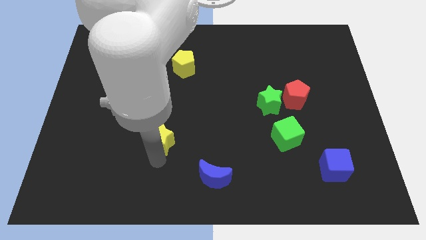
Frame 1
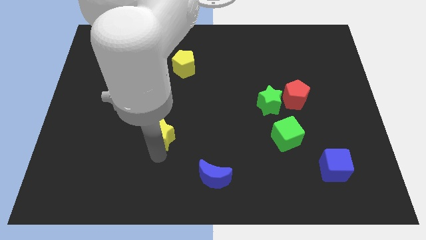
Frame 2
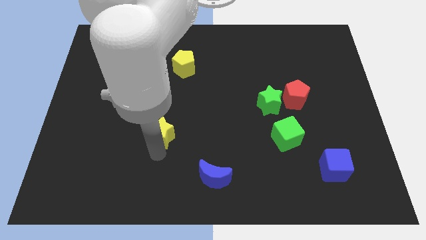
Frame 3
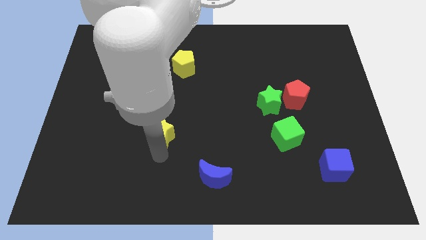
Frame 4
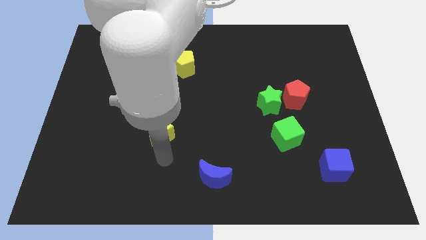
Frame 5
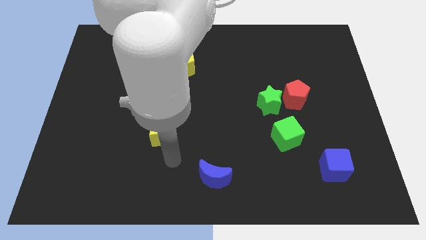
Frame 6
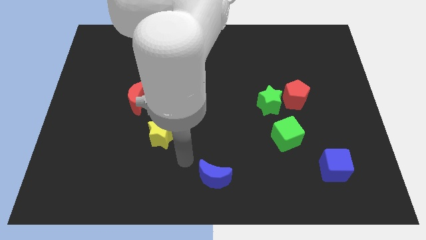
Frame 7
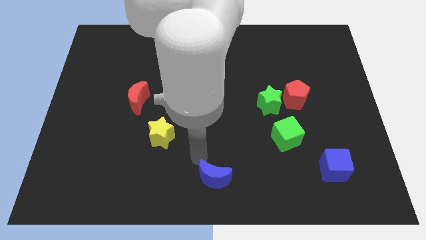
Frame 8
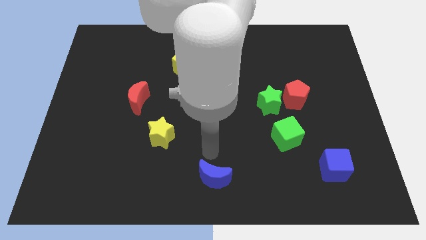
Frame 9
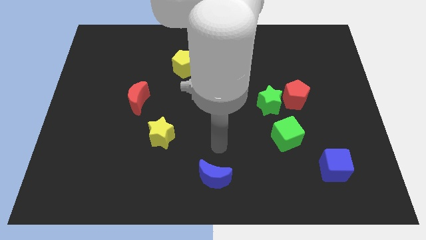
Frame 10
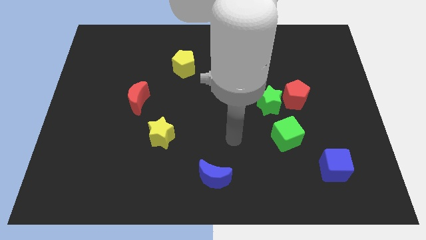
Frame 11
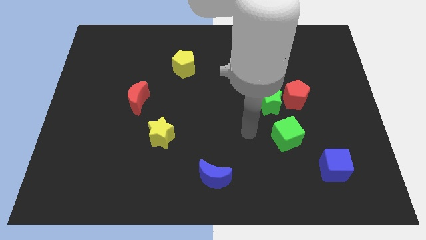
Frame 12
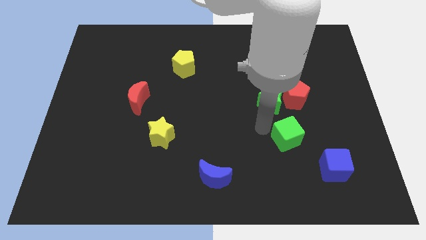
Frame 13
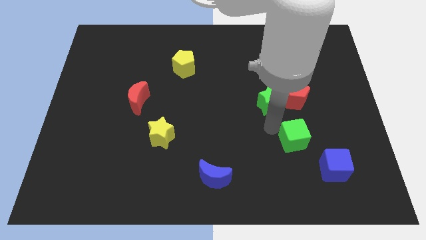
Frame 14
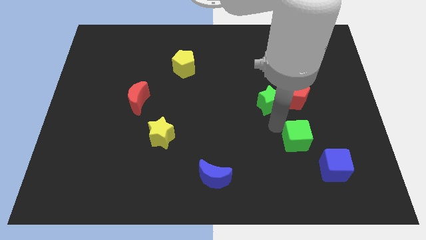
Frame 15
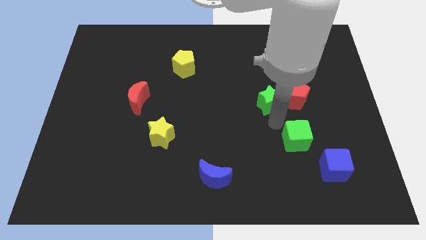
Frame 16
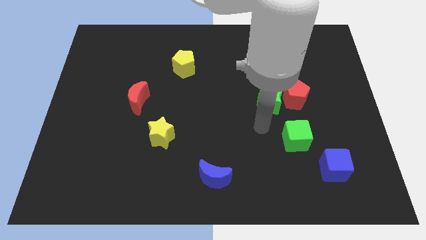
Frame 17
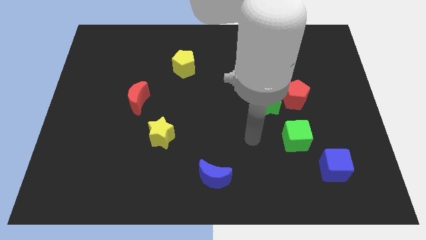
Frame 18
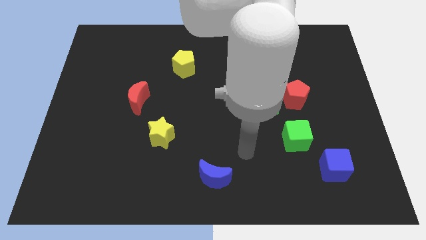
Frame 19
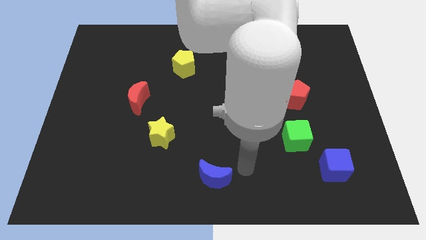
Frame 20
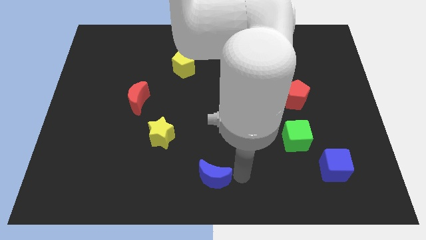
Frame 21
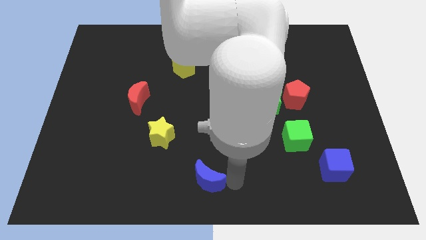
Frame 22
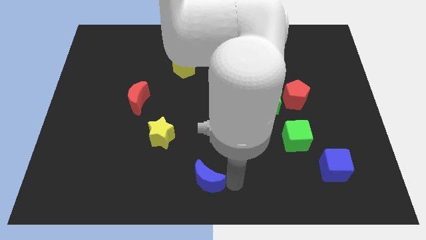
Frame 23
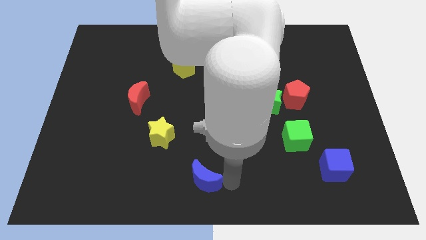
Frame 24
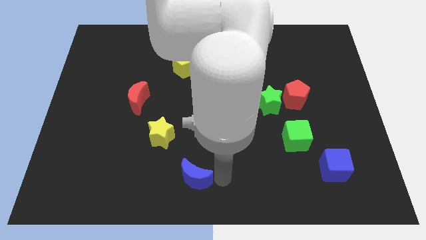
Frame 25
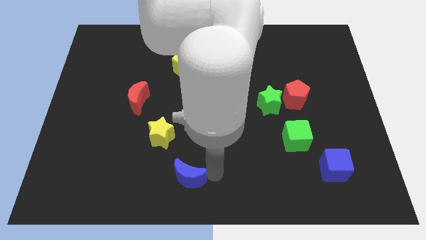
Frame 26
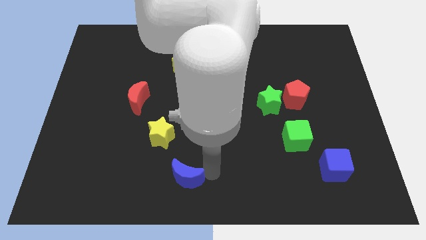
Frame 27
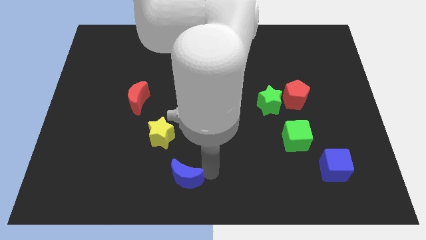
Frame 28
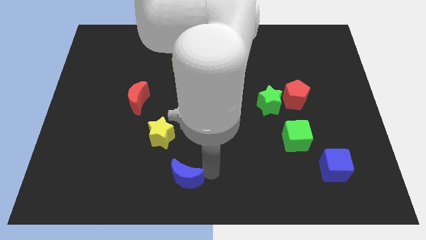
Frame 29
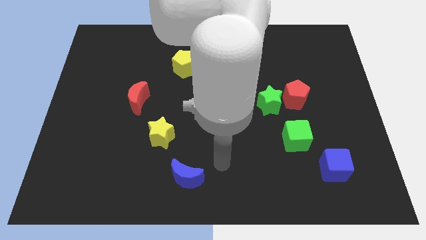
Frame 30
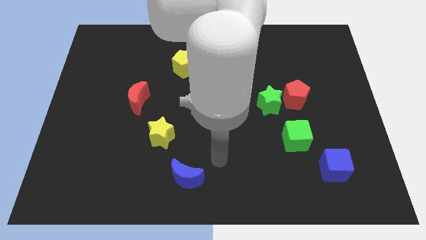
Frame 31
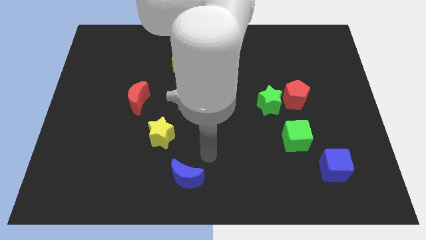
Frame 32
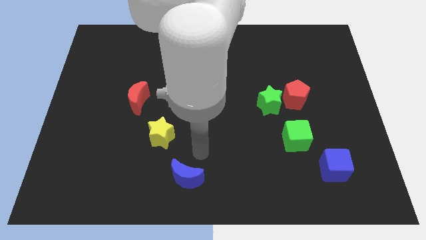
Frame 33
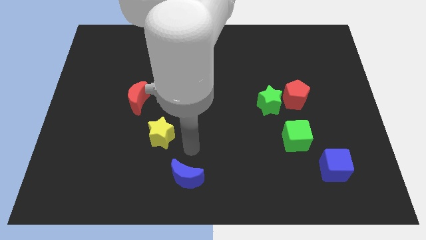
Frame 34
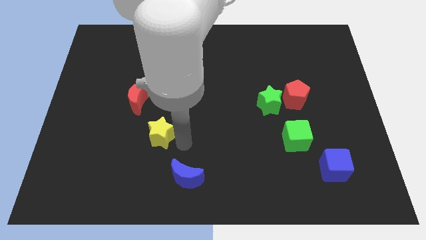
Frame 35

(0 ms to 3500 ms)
move the blue moon slightly to the yellow star

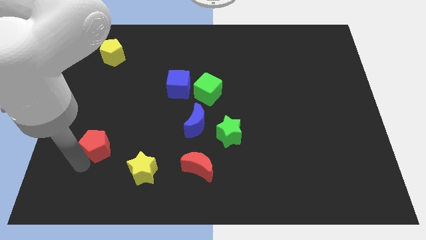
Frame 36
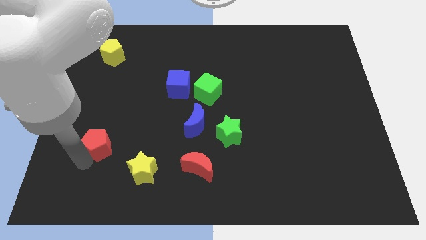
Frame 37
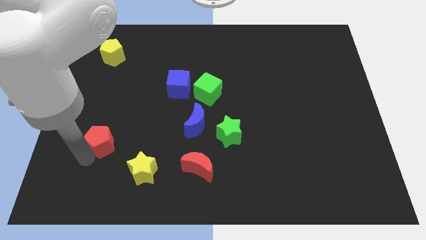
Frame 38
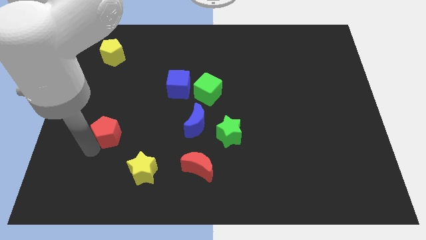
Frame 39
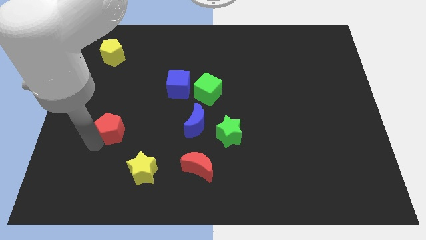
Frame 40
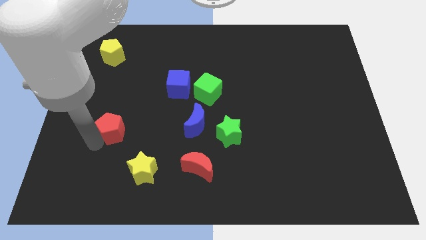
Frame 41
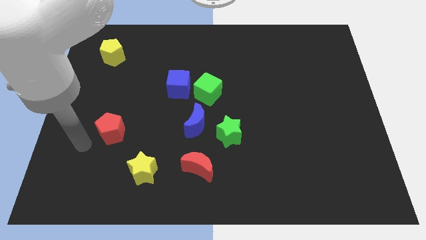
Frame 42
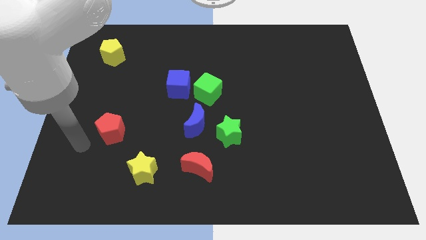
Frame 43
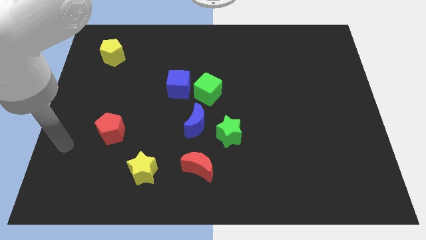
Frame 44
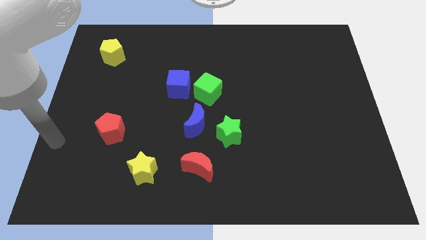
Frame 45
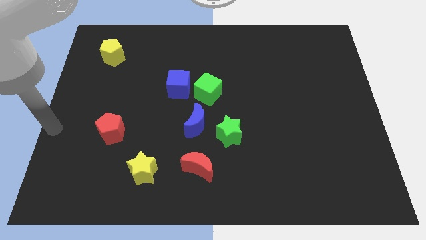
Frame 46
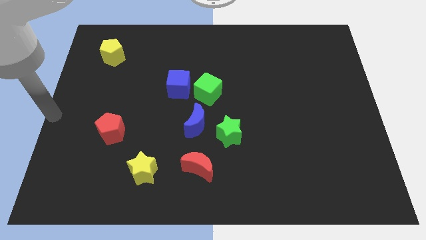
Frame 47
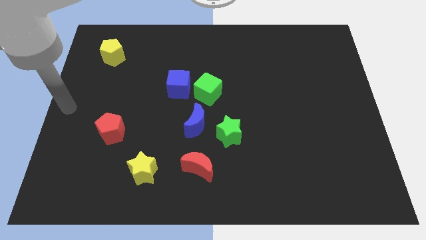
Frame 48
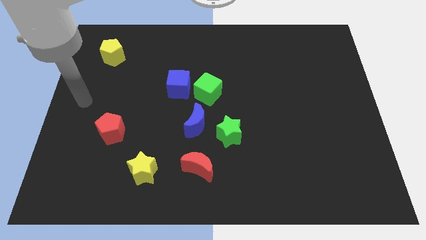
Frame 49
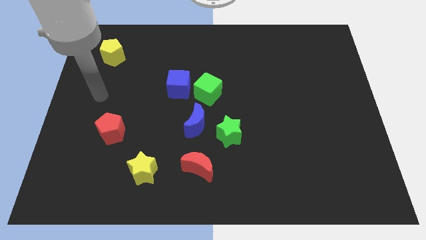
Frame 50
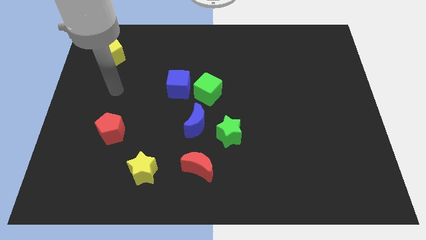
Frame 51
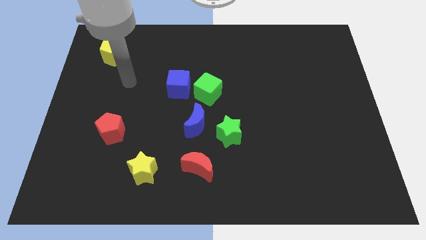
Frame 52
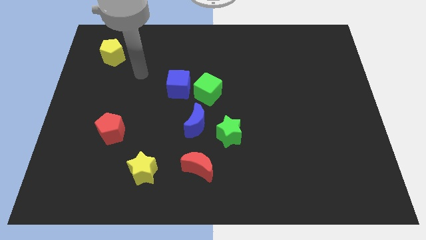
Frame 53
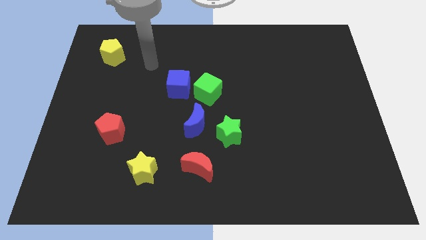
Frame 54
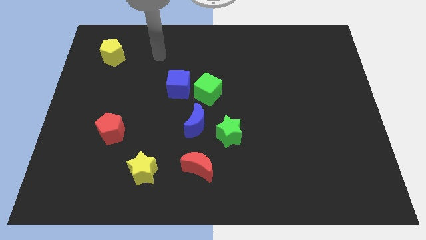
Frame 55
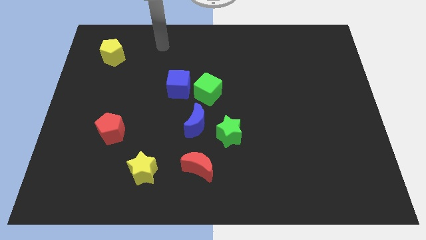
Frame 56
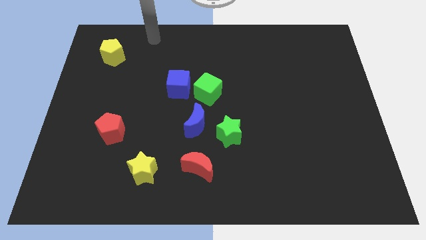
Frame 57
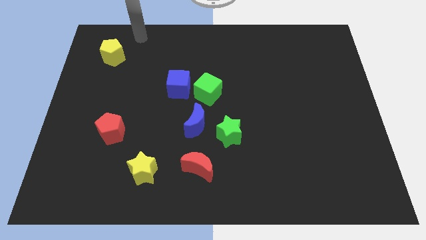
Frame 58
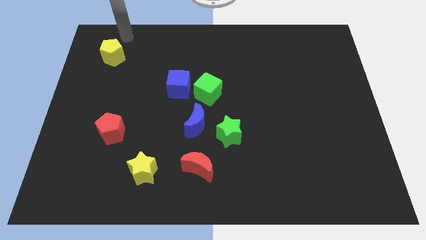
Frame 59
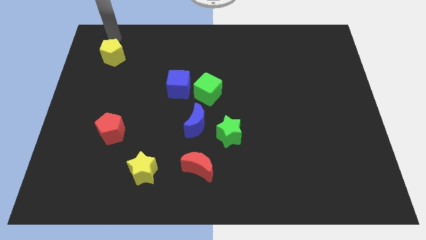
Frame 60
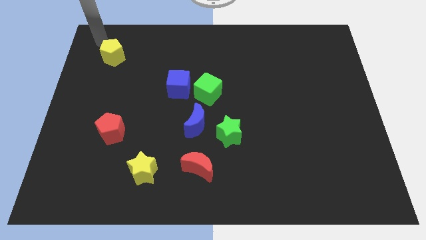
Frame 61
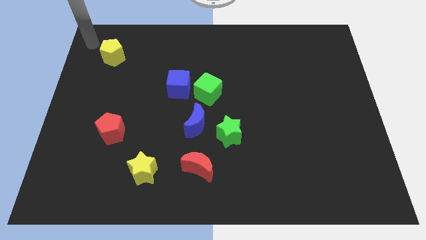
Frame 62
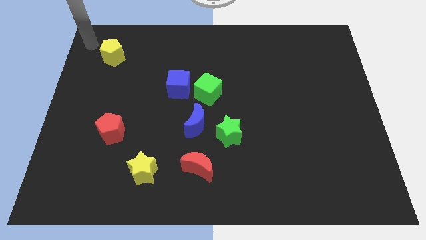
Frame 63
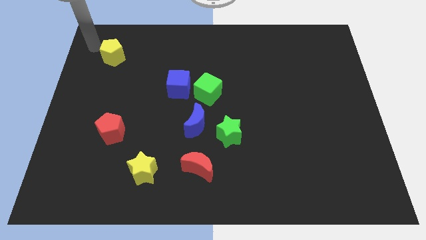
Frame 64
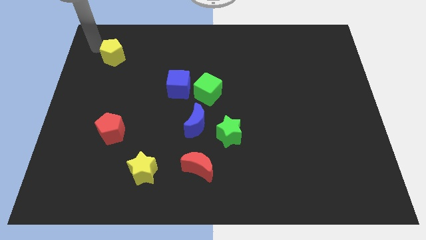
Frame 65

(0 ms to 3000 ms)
place the arm towards the left side of the yellow pentagon

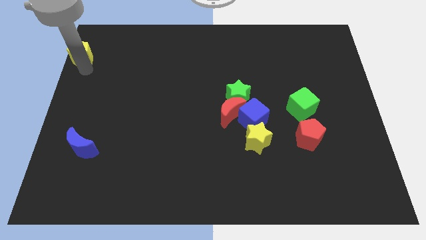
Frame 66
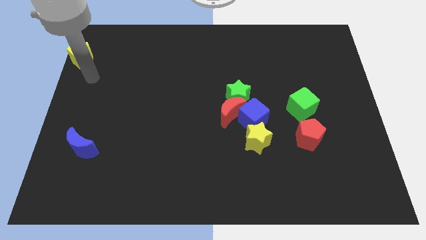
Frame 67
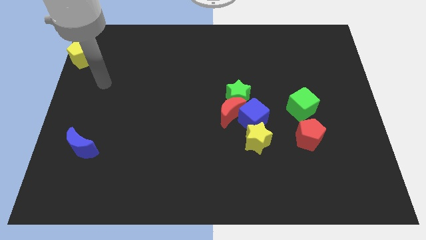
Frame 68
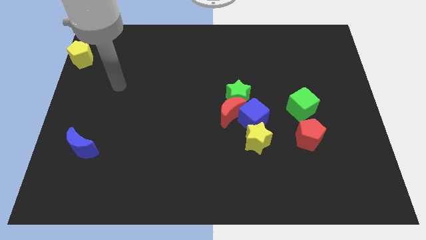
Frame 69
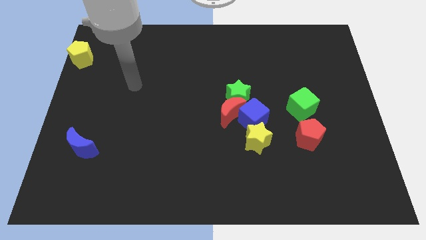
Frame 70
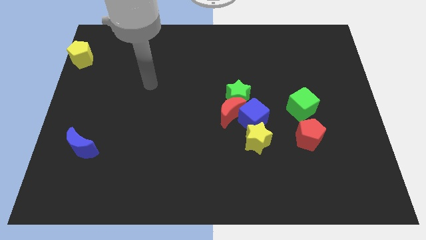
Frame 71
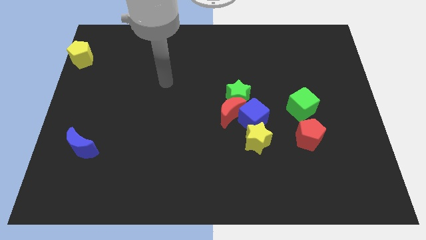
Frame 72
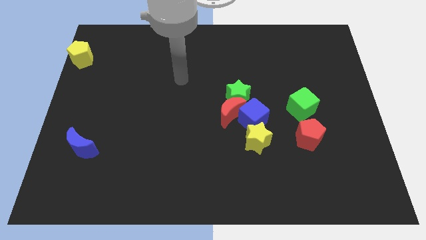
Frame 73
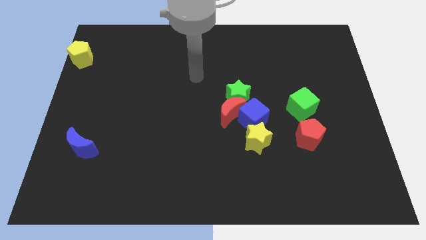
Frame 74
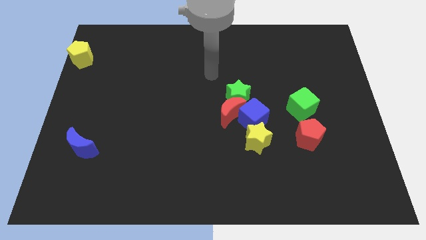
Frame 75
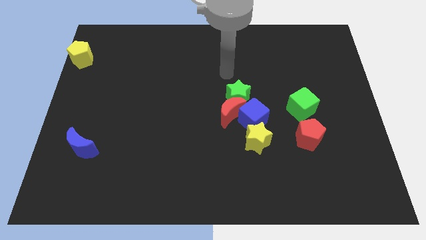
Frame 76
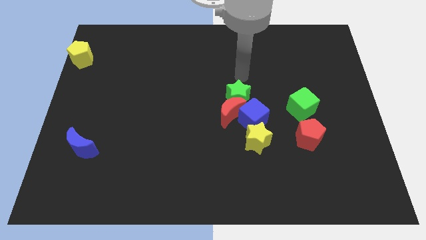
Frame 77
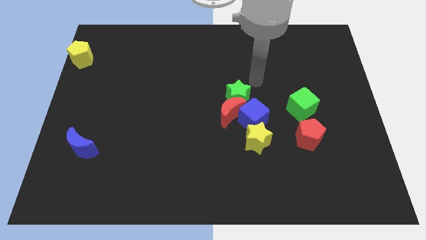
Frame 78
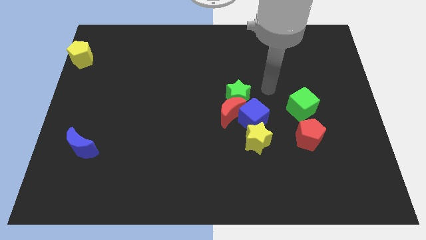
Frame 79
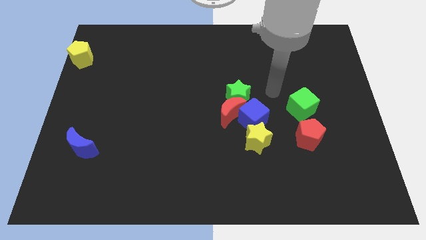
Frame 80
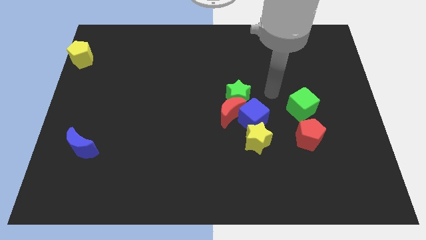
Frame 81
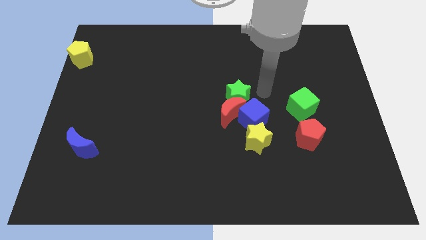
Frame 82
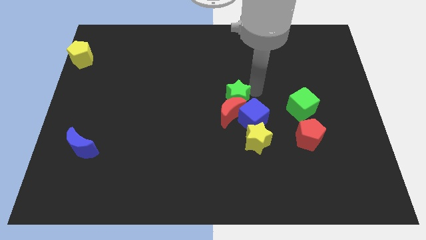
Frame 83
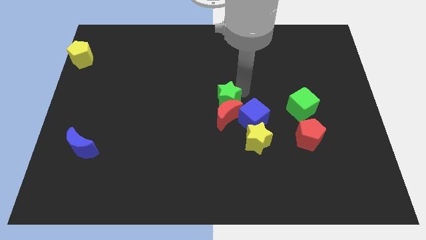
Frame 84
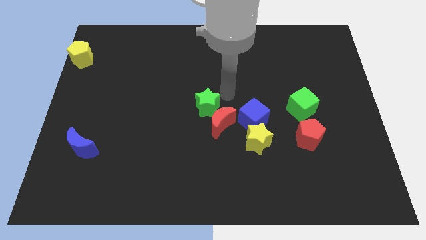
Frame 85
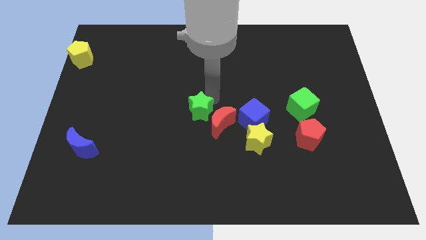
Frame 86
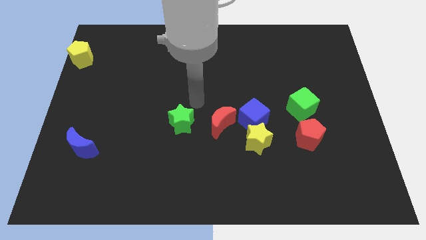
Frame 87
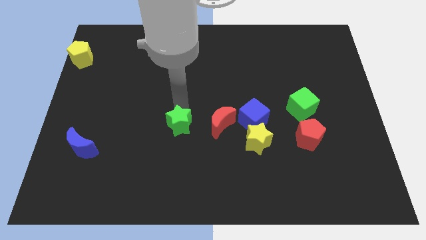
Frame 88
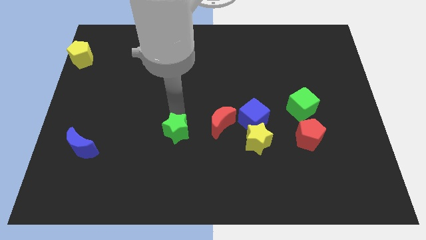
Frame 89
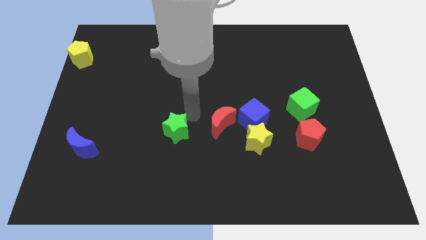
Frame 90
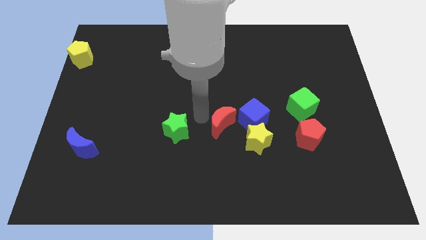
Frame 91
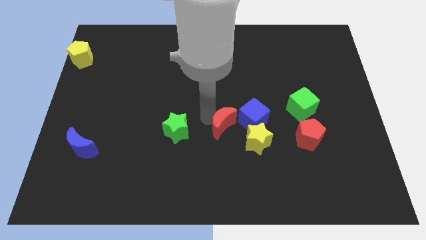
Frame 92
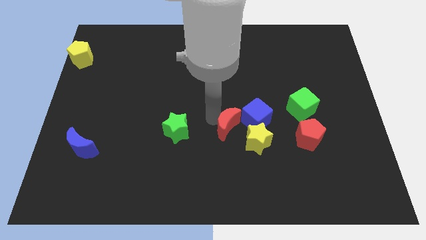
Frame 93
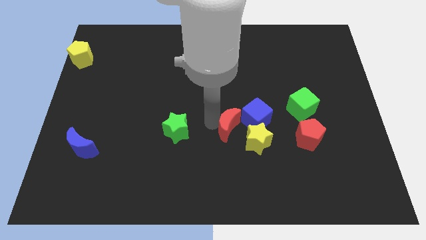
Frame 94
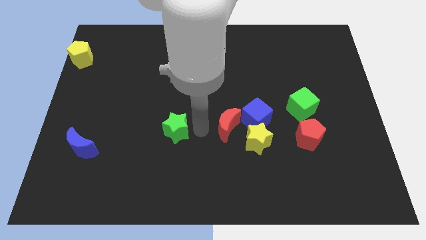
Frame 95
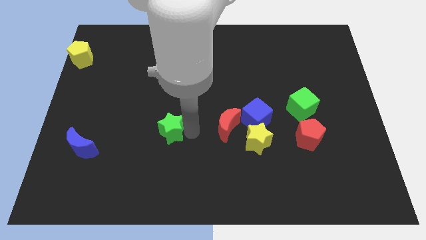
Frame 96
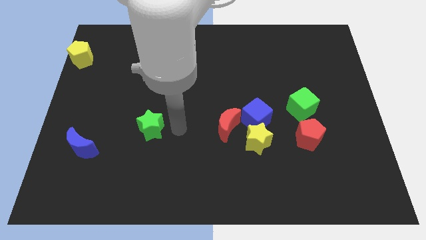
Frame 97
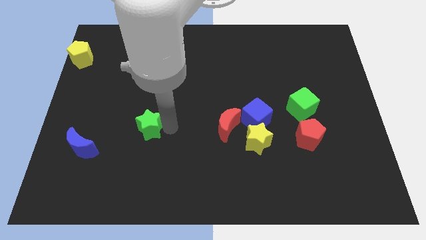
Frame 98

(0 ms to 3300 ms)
push the green star away from the red crescent
